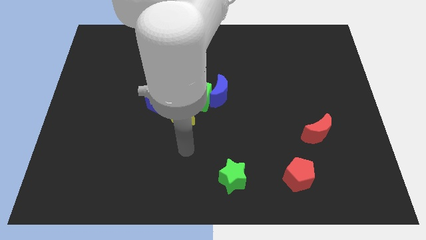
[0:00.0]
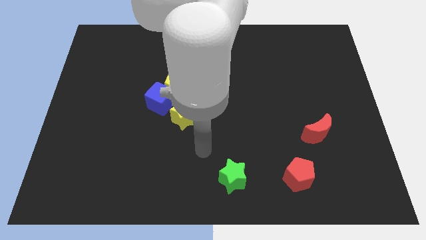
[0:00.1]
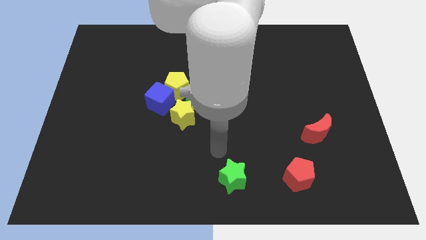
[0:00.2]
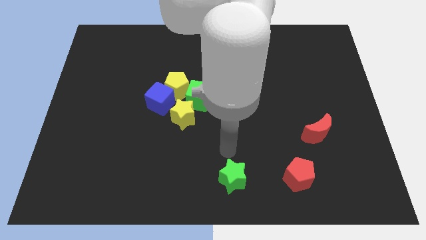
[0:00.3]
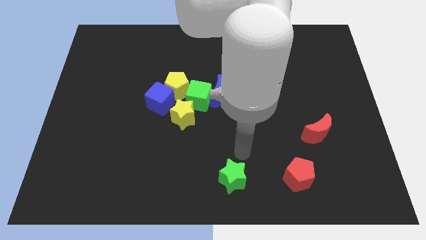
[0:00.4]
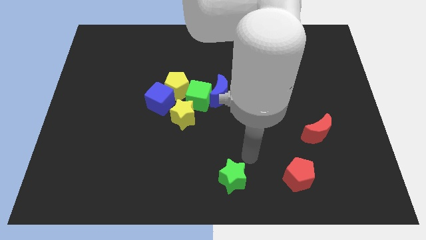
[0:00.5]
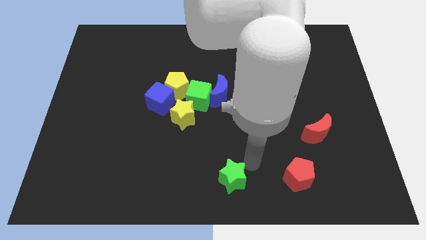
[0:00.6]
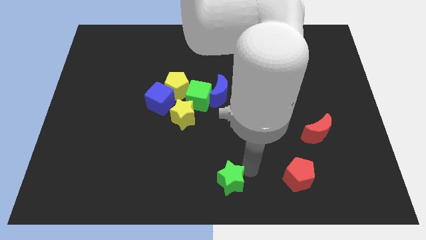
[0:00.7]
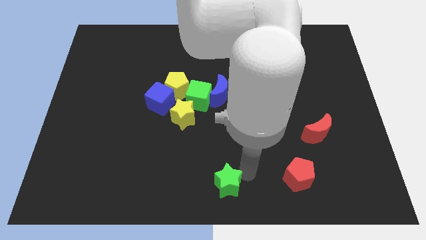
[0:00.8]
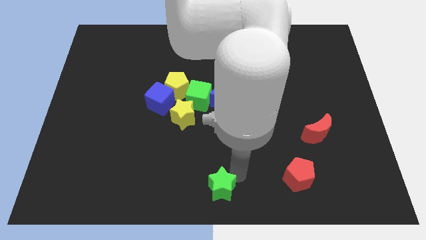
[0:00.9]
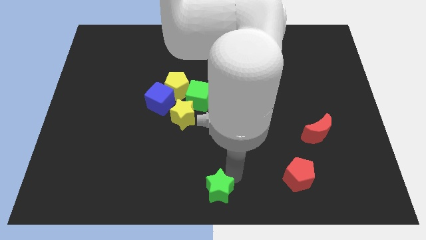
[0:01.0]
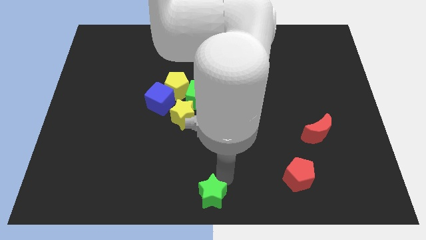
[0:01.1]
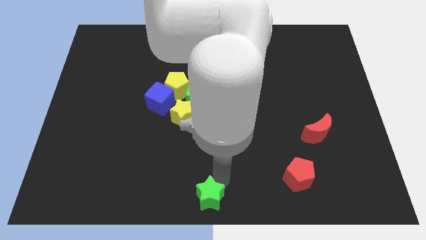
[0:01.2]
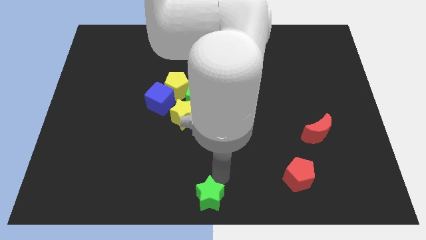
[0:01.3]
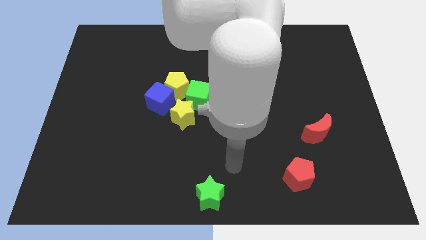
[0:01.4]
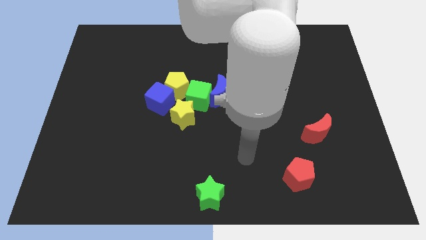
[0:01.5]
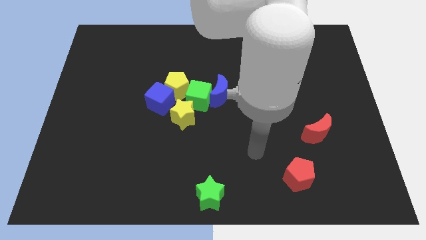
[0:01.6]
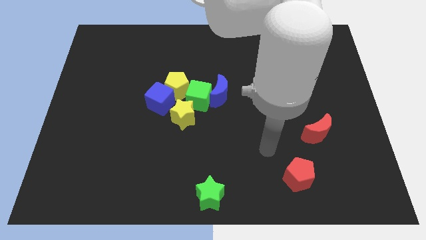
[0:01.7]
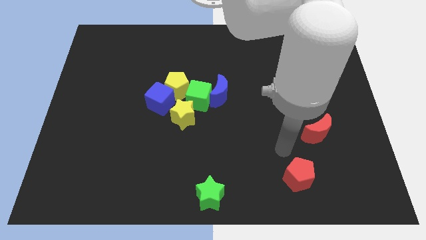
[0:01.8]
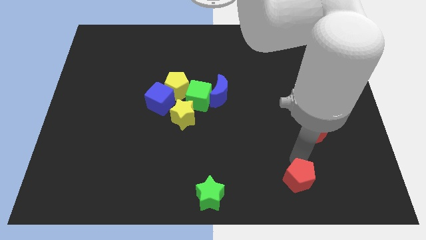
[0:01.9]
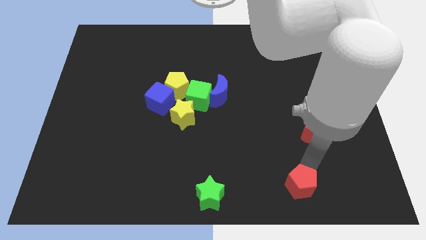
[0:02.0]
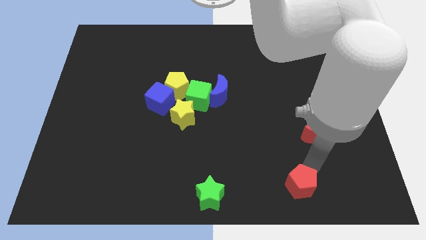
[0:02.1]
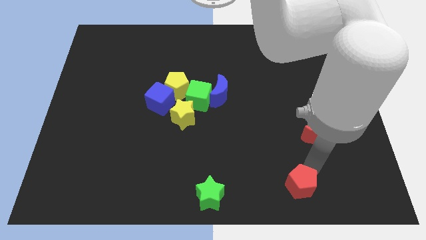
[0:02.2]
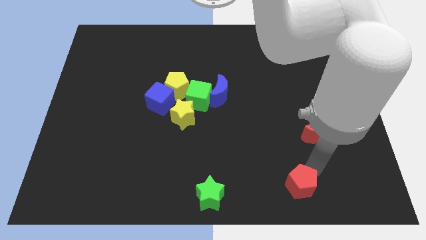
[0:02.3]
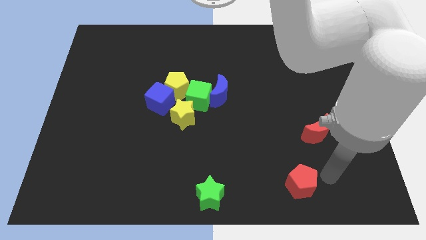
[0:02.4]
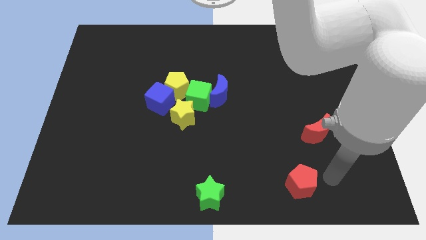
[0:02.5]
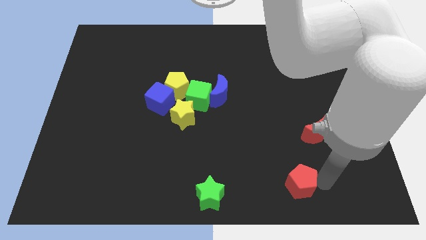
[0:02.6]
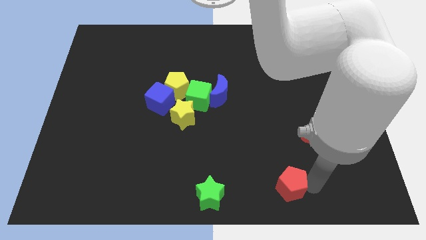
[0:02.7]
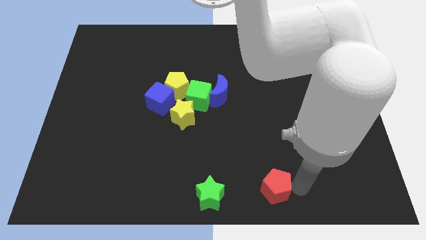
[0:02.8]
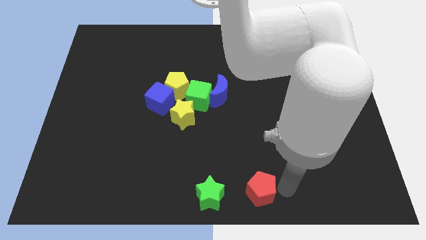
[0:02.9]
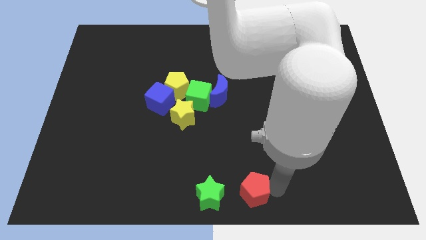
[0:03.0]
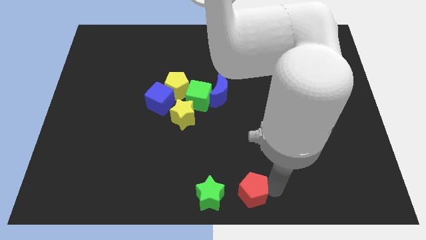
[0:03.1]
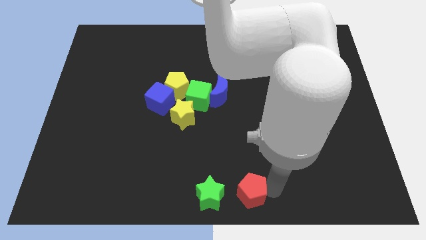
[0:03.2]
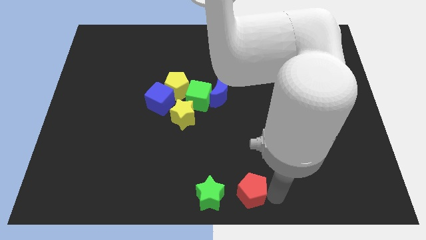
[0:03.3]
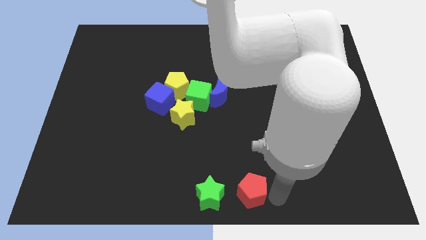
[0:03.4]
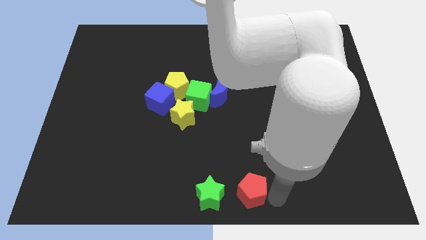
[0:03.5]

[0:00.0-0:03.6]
put the red pentagon at the bottom center

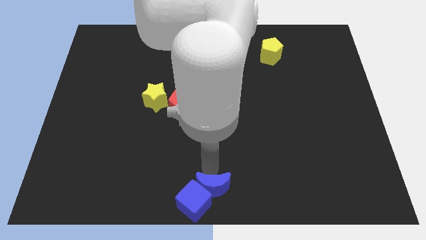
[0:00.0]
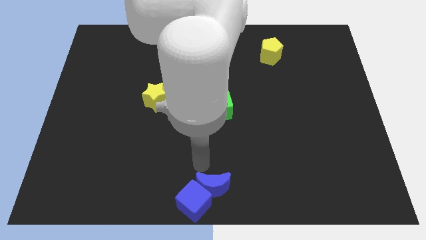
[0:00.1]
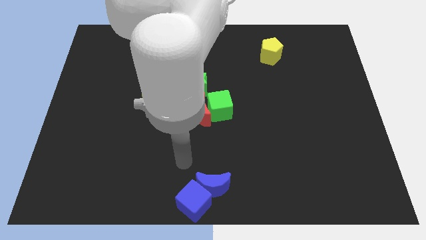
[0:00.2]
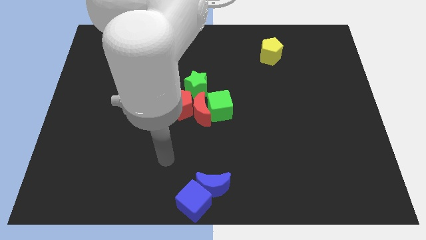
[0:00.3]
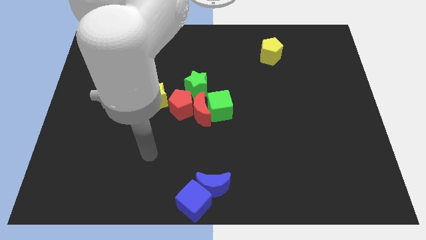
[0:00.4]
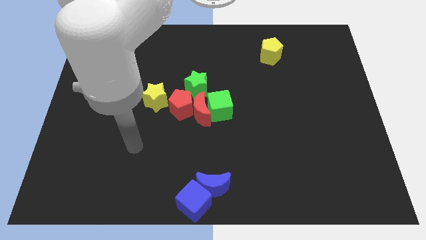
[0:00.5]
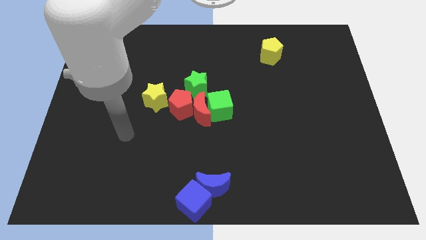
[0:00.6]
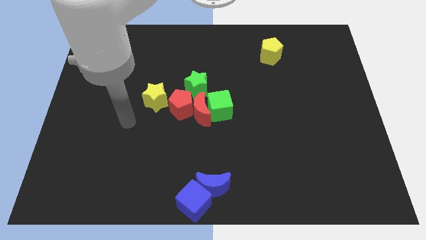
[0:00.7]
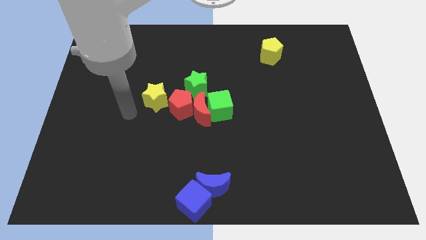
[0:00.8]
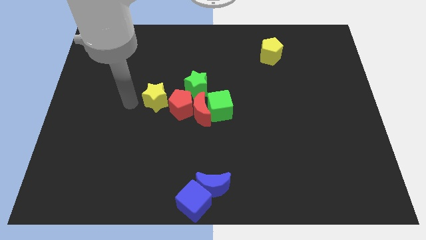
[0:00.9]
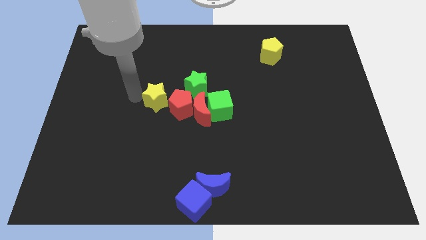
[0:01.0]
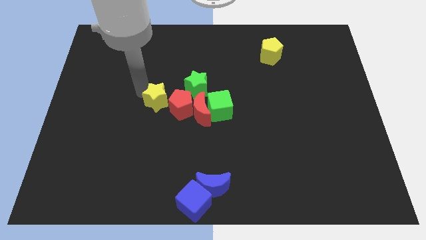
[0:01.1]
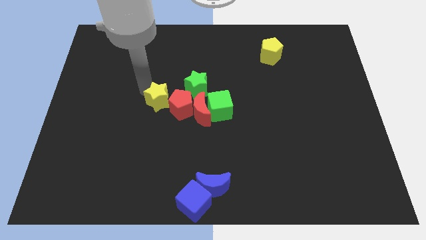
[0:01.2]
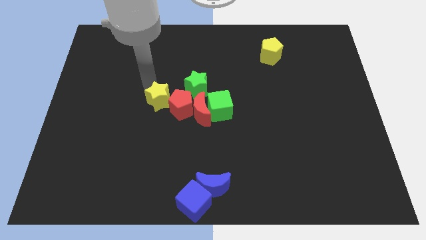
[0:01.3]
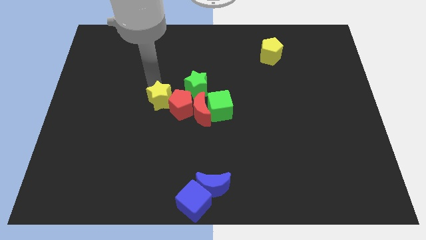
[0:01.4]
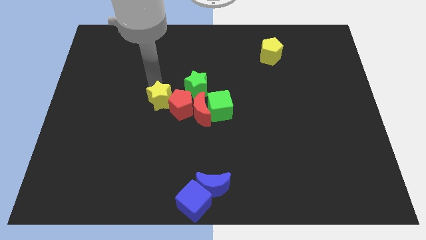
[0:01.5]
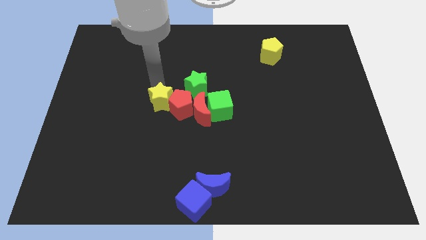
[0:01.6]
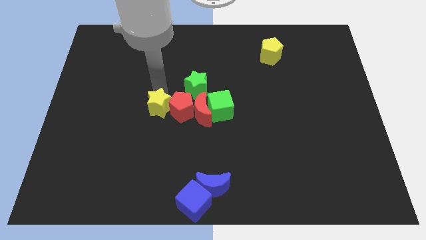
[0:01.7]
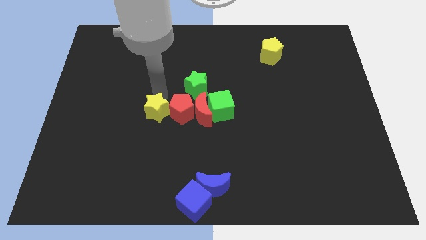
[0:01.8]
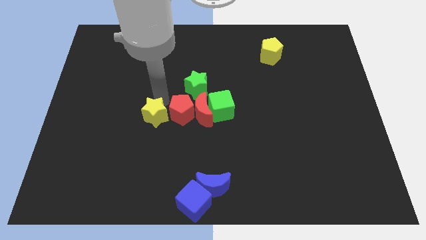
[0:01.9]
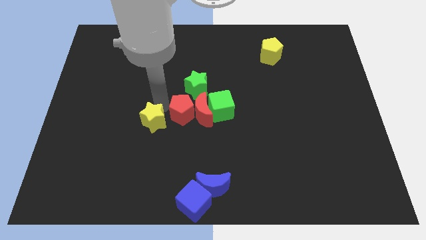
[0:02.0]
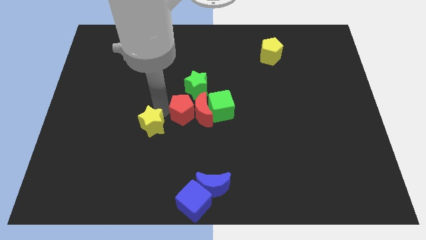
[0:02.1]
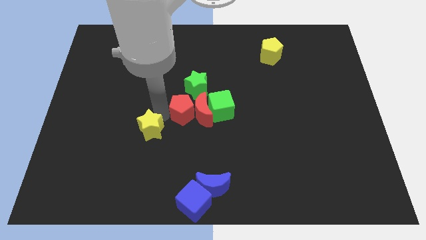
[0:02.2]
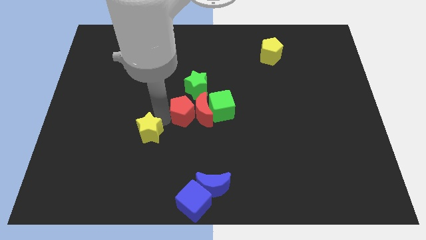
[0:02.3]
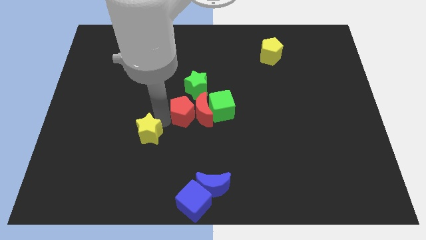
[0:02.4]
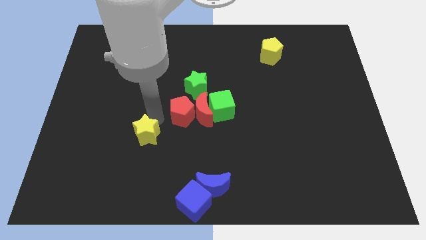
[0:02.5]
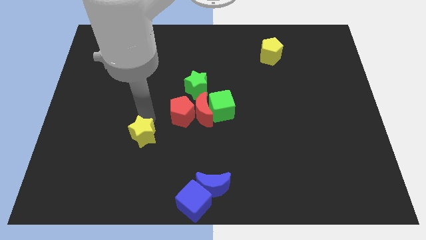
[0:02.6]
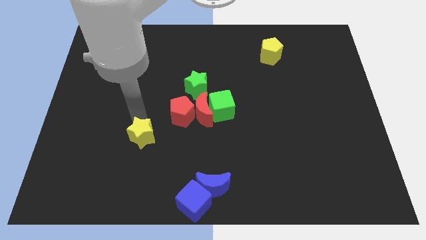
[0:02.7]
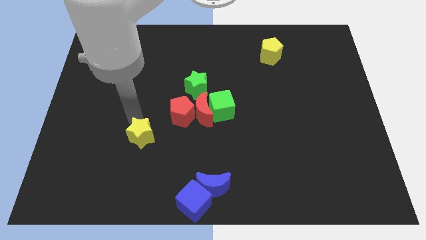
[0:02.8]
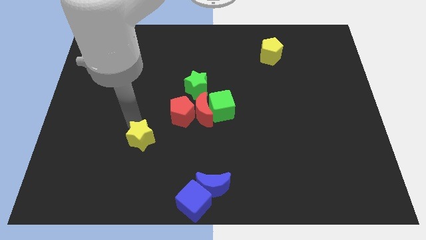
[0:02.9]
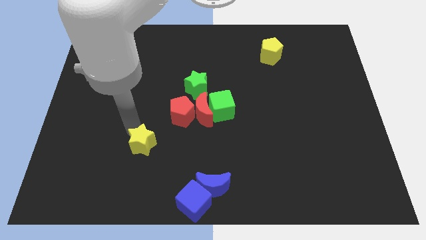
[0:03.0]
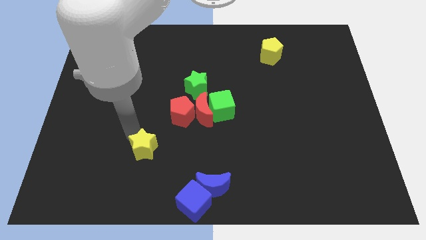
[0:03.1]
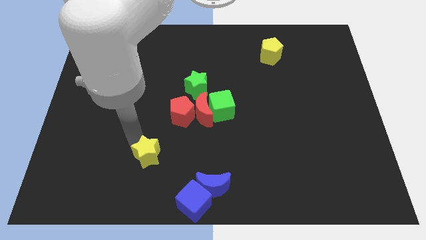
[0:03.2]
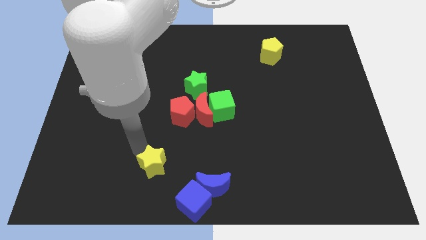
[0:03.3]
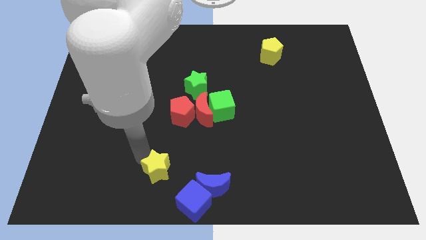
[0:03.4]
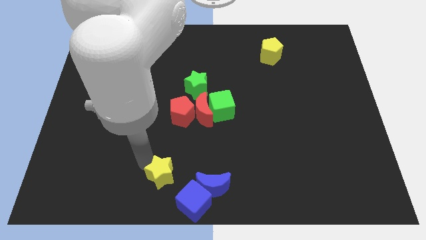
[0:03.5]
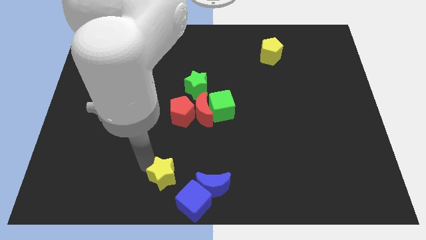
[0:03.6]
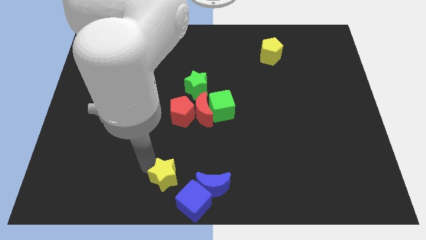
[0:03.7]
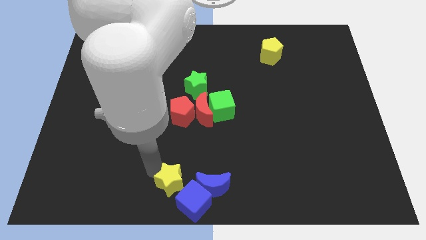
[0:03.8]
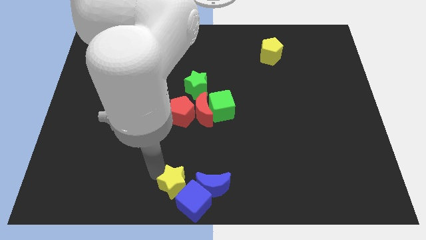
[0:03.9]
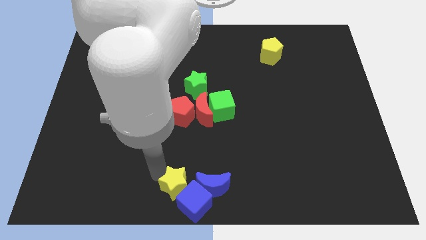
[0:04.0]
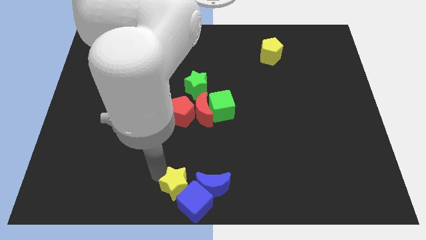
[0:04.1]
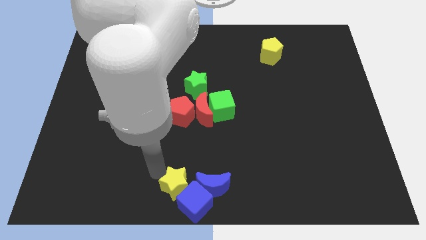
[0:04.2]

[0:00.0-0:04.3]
push the yellow star to the left of the blue crescent

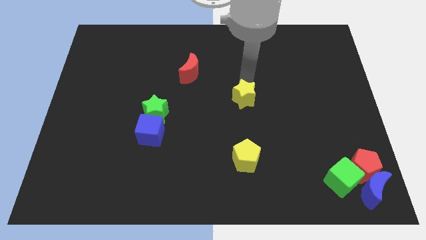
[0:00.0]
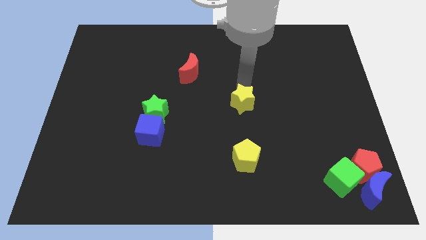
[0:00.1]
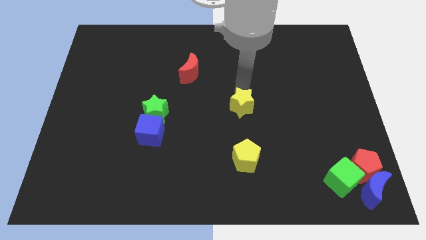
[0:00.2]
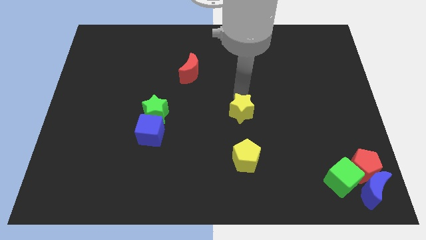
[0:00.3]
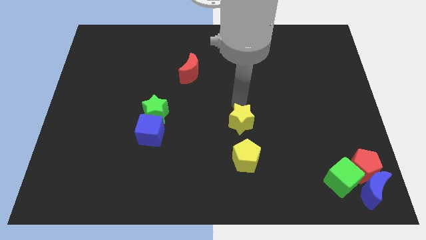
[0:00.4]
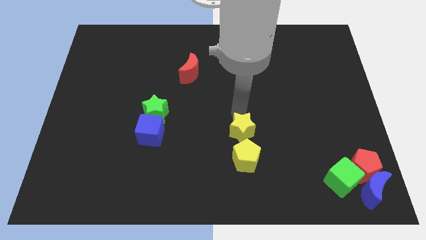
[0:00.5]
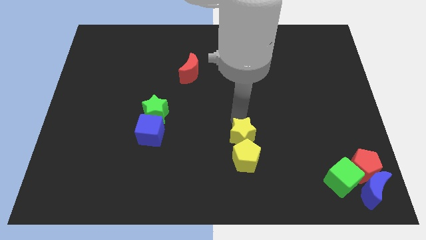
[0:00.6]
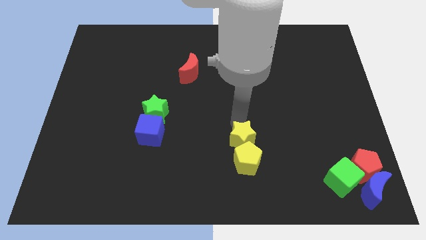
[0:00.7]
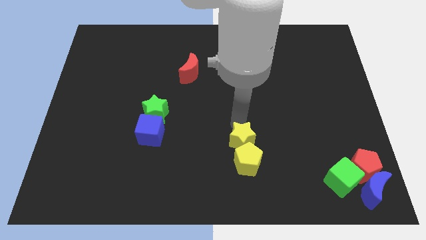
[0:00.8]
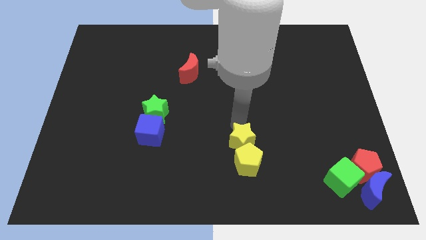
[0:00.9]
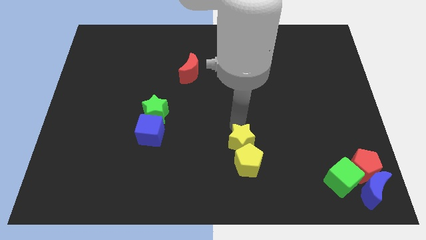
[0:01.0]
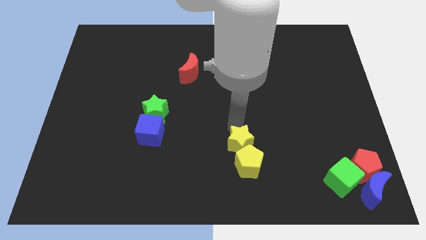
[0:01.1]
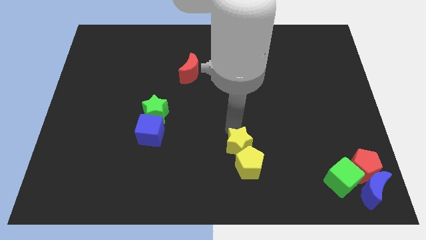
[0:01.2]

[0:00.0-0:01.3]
move yellow star to the top of yellow pentagon
